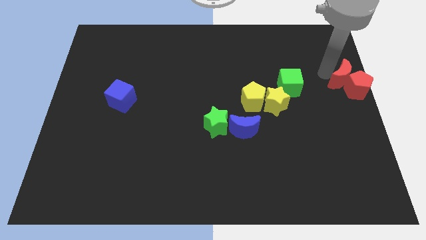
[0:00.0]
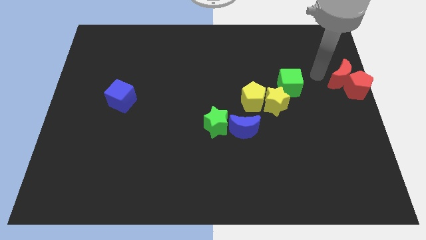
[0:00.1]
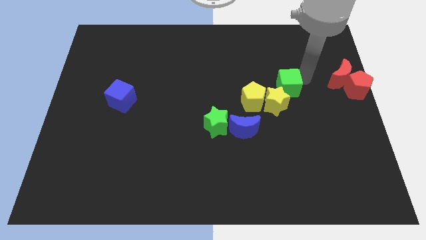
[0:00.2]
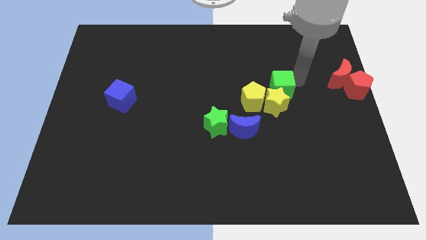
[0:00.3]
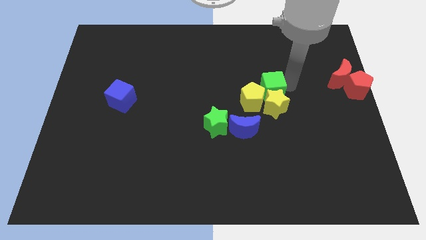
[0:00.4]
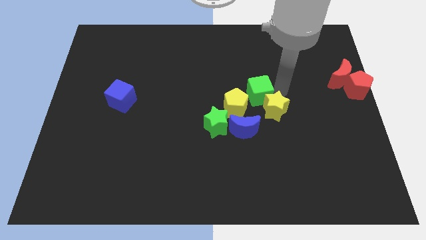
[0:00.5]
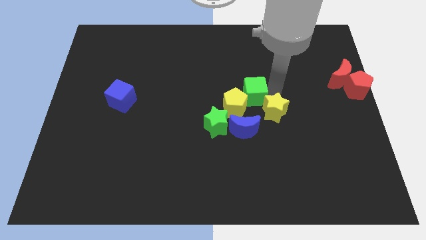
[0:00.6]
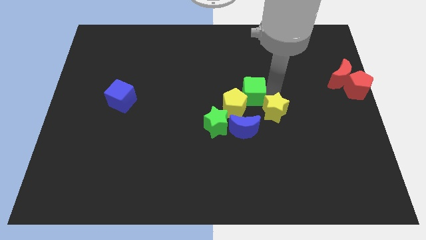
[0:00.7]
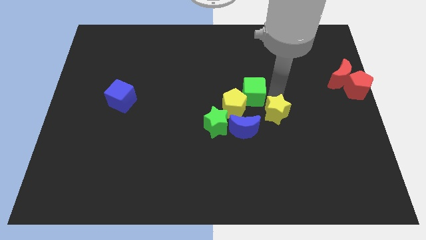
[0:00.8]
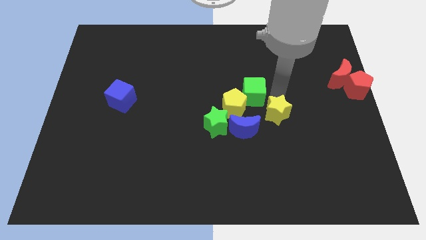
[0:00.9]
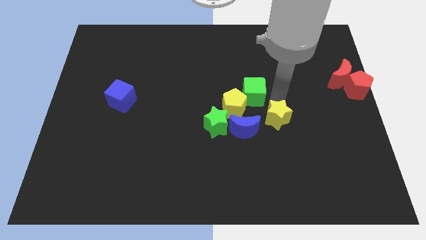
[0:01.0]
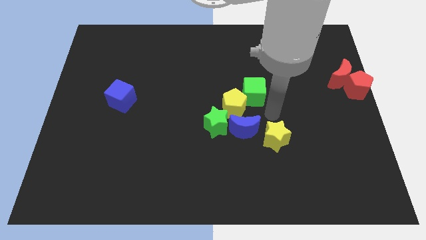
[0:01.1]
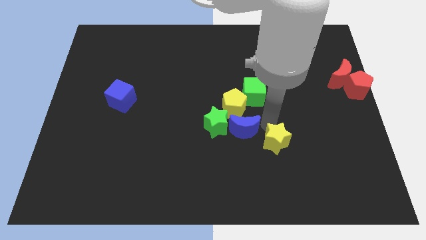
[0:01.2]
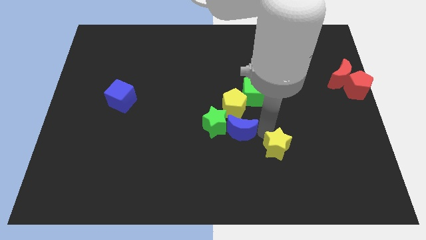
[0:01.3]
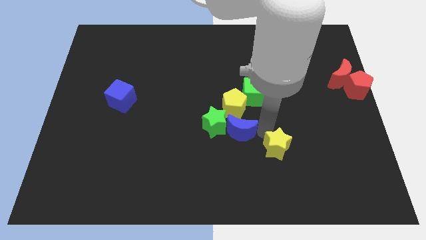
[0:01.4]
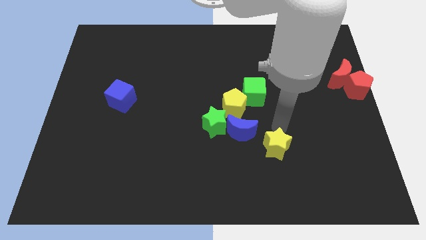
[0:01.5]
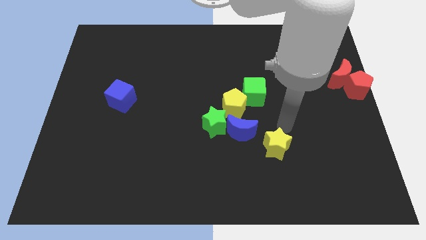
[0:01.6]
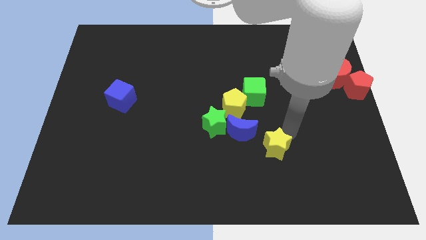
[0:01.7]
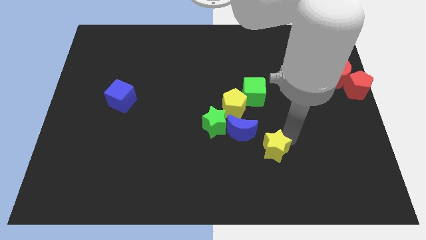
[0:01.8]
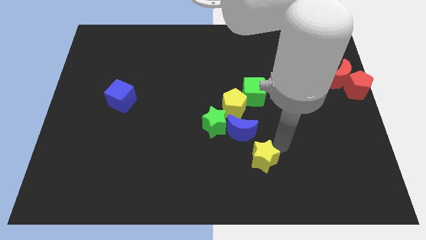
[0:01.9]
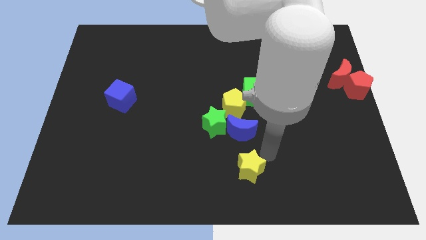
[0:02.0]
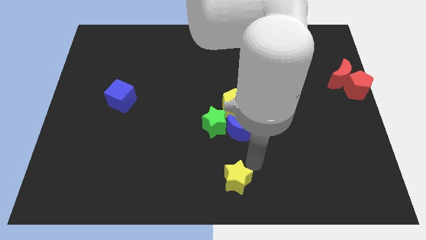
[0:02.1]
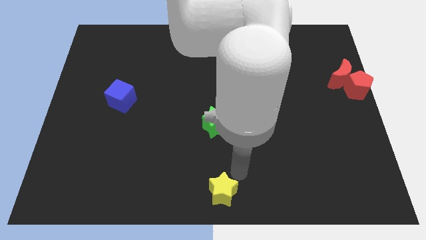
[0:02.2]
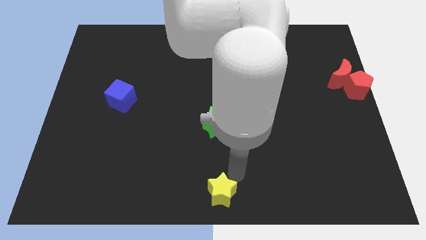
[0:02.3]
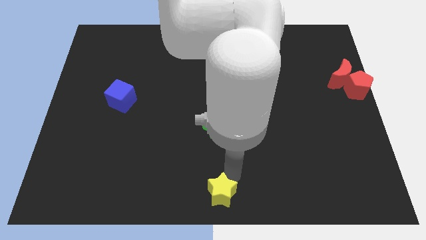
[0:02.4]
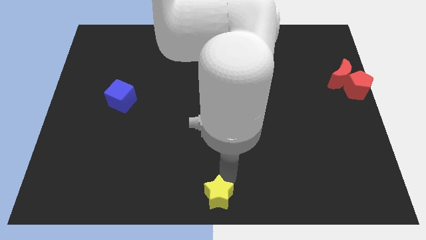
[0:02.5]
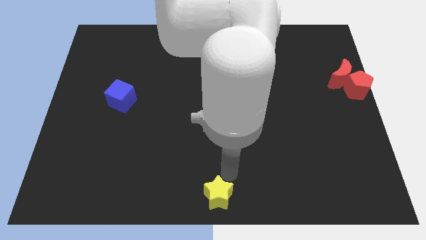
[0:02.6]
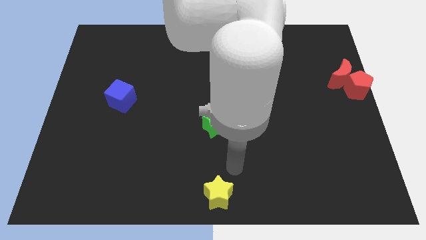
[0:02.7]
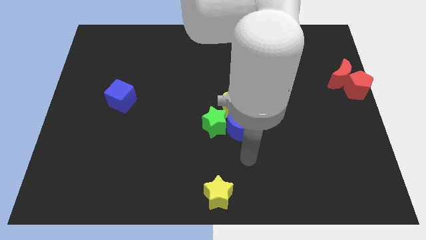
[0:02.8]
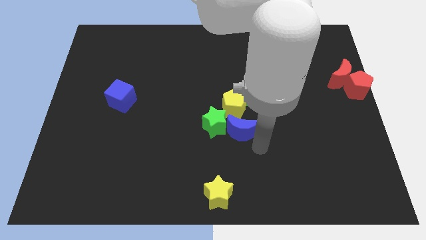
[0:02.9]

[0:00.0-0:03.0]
move the yellow star to the bottom center

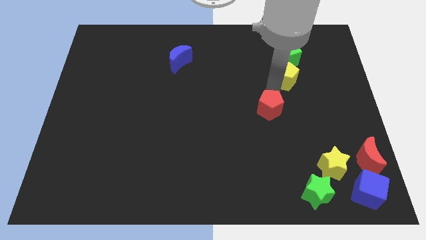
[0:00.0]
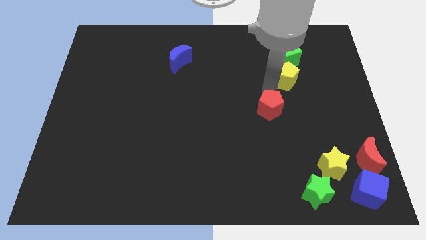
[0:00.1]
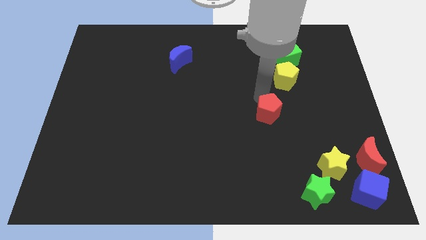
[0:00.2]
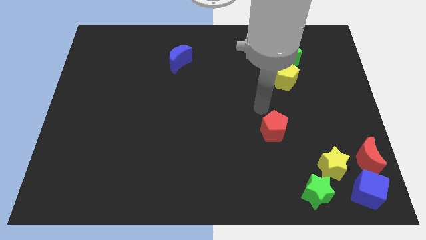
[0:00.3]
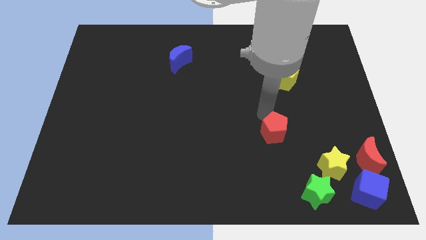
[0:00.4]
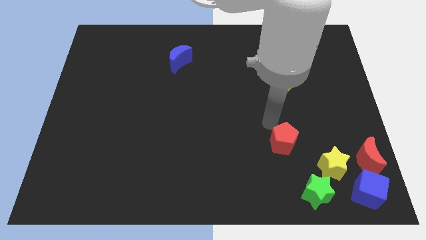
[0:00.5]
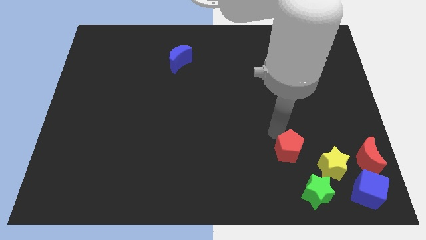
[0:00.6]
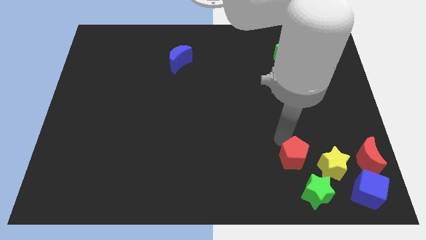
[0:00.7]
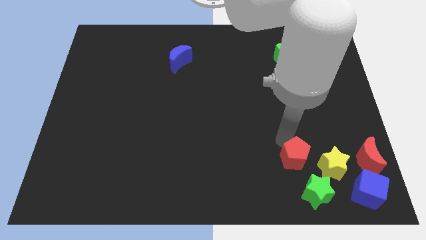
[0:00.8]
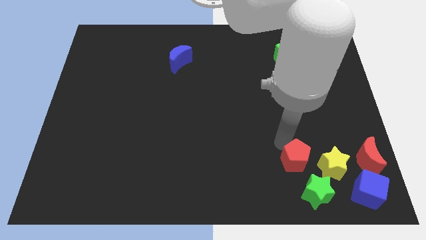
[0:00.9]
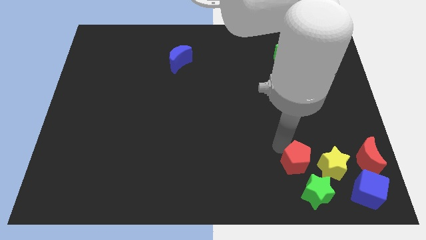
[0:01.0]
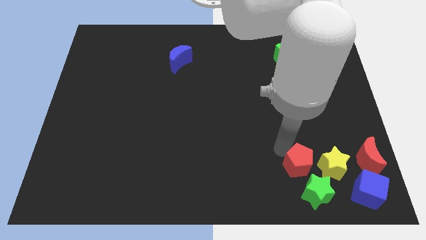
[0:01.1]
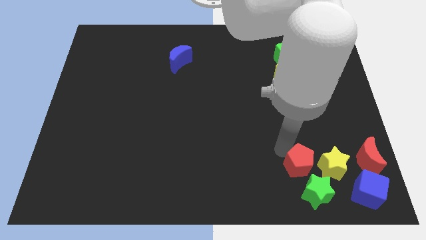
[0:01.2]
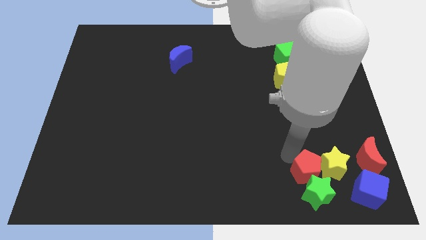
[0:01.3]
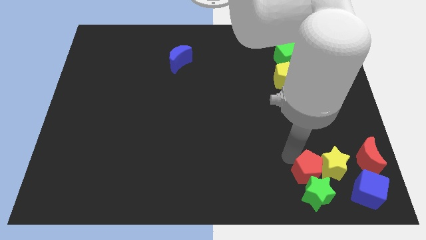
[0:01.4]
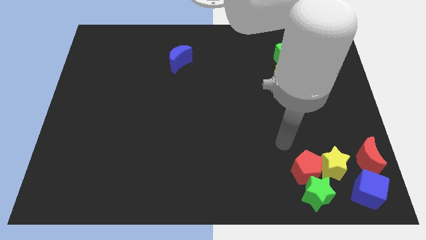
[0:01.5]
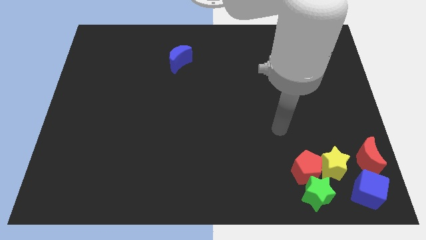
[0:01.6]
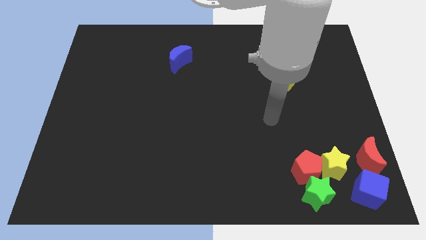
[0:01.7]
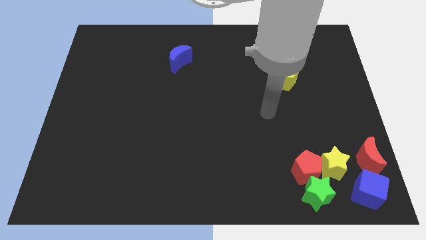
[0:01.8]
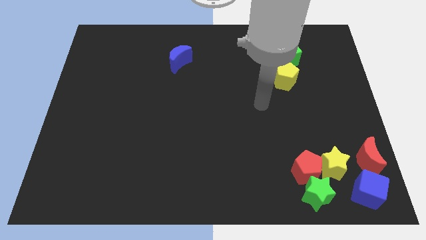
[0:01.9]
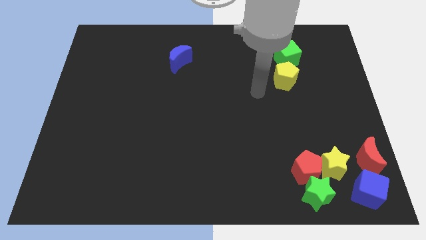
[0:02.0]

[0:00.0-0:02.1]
add the red pentagon to the group of blocks at the bottom right corner of the board

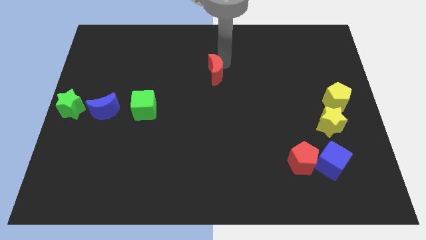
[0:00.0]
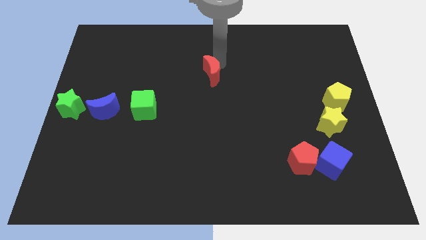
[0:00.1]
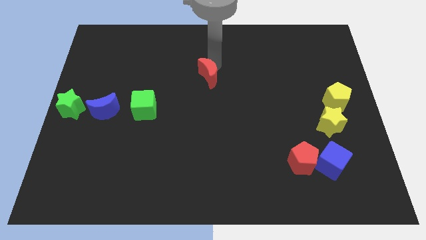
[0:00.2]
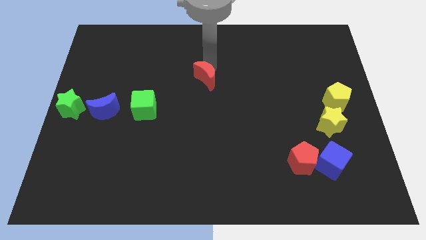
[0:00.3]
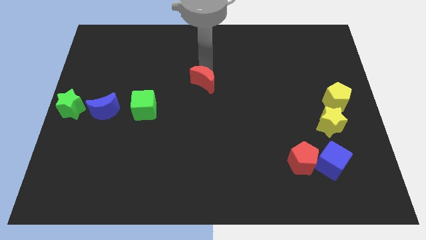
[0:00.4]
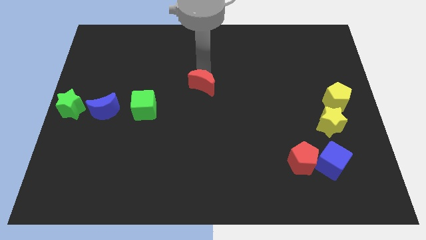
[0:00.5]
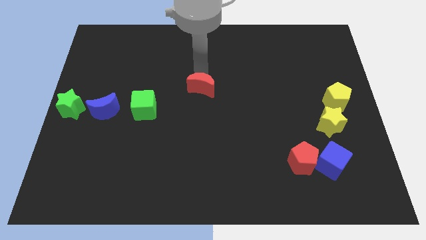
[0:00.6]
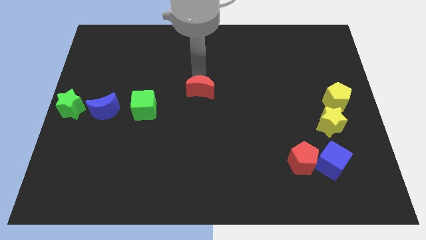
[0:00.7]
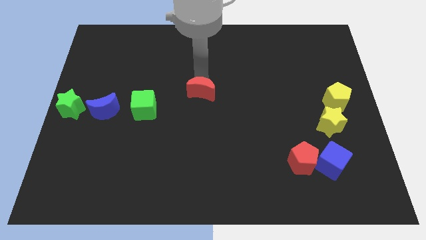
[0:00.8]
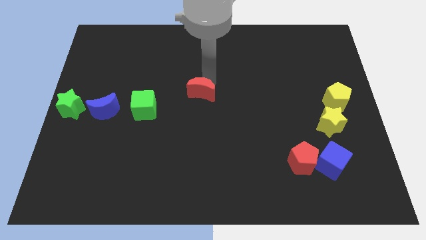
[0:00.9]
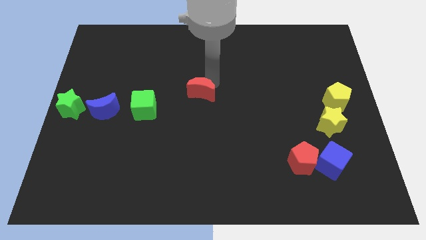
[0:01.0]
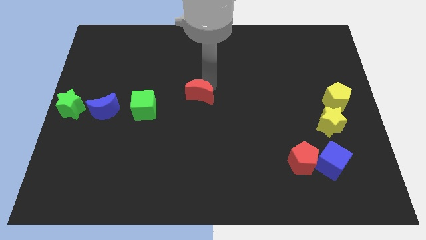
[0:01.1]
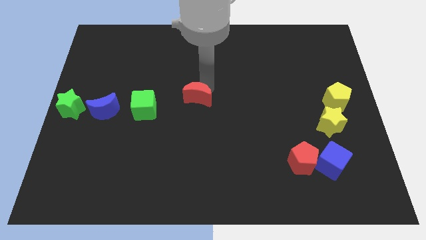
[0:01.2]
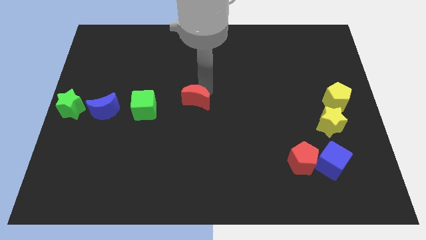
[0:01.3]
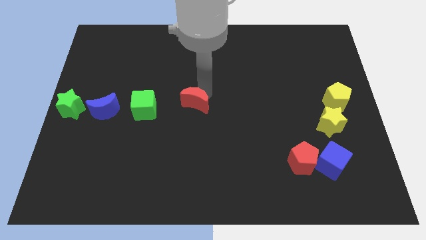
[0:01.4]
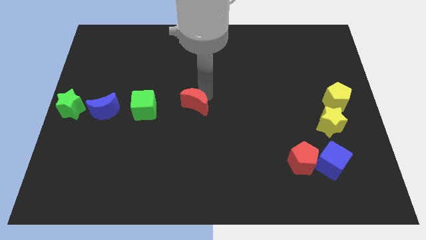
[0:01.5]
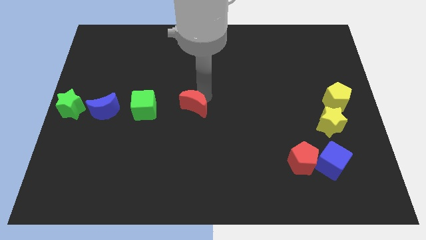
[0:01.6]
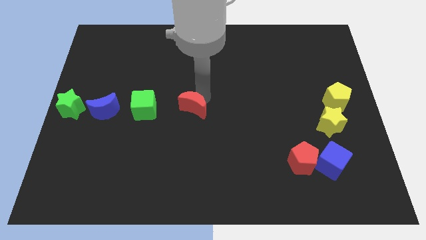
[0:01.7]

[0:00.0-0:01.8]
place the red crescent to the center of the board

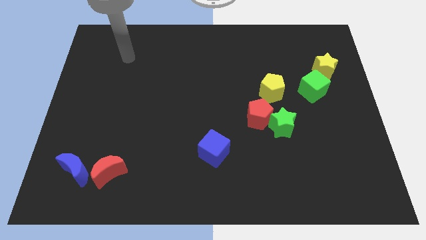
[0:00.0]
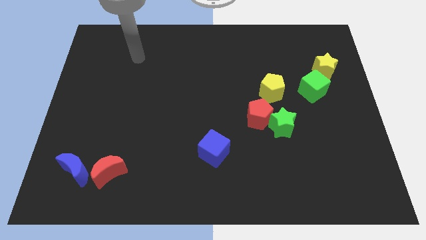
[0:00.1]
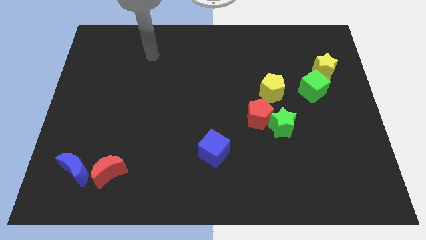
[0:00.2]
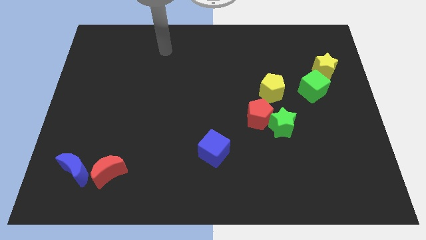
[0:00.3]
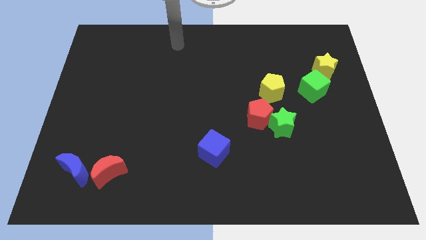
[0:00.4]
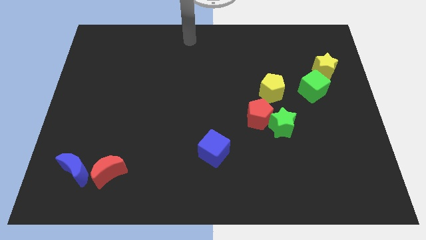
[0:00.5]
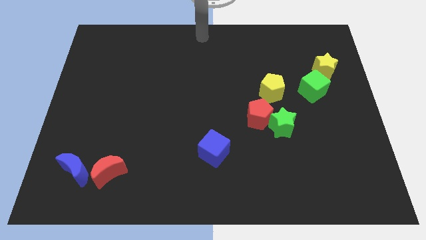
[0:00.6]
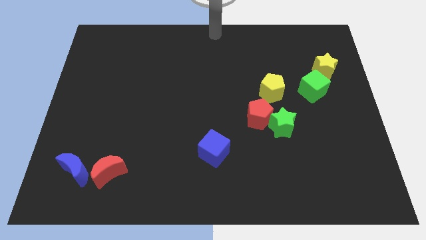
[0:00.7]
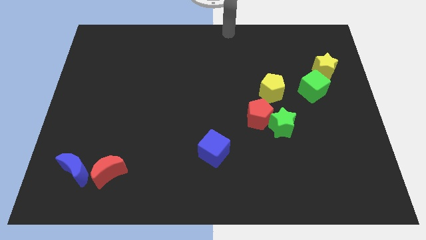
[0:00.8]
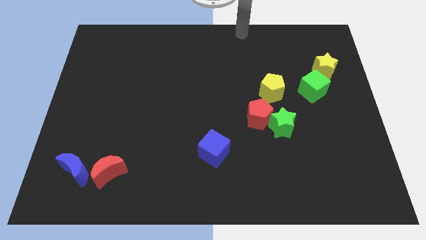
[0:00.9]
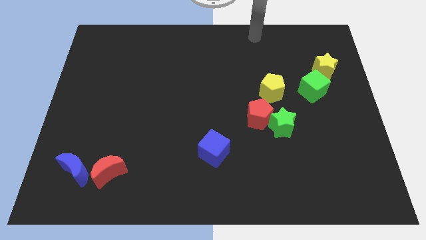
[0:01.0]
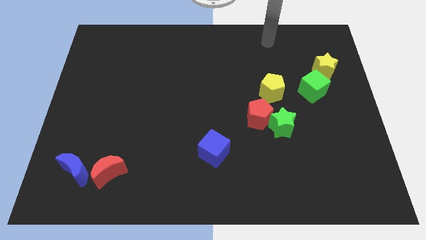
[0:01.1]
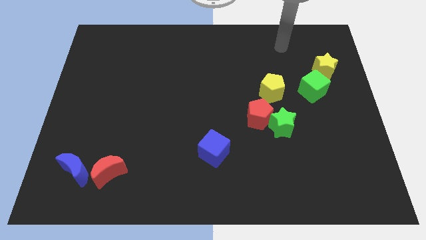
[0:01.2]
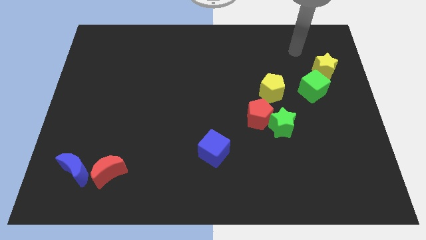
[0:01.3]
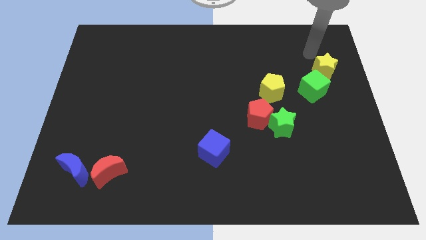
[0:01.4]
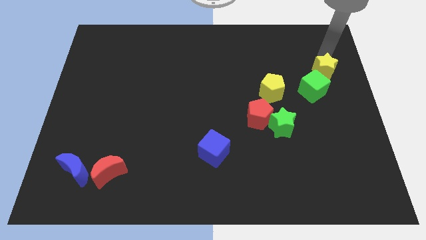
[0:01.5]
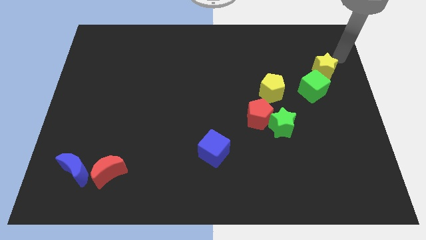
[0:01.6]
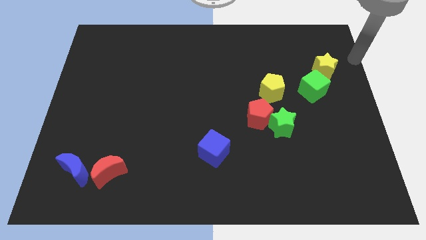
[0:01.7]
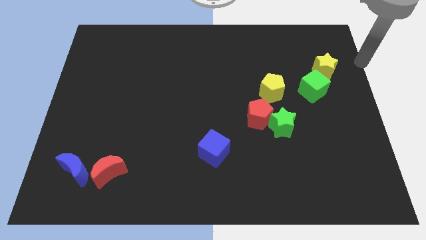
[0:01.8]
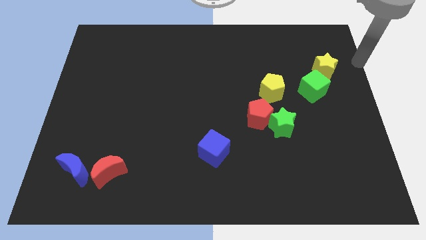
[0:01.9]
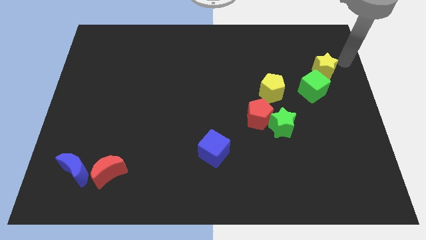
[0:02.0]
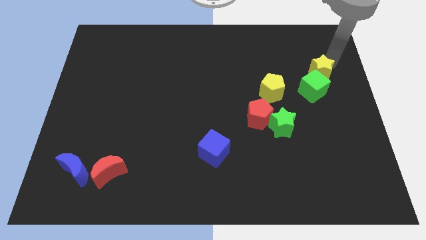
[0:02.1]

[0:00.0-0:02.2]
move your arm to the top right of the yellow star

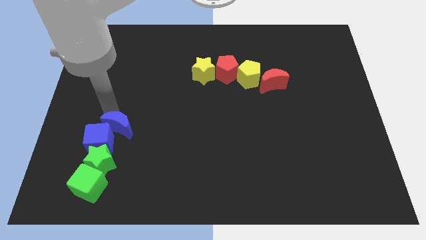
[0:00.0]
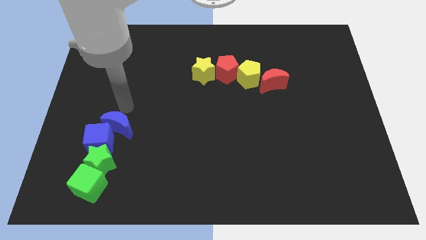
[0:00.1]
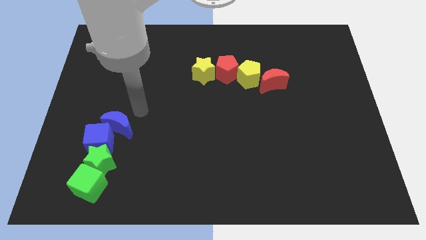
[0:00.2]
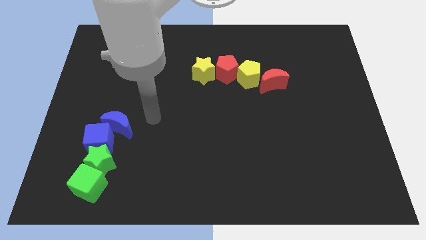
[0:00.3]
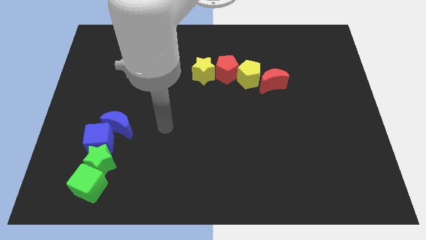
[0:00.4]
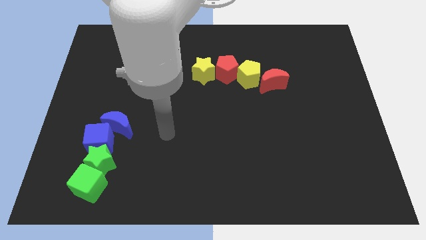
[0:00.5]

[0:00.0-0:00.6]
move the arm right to the blue moon
